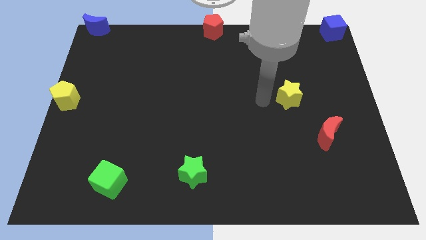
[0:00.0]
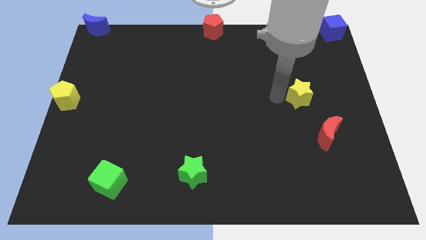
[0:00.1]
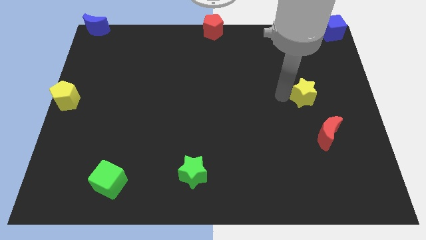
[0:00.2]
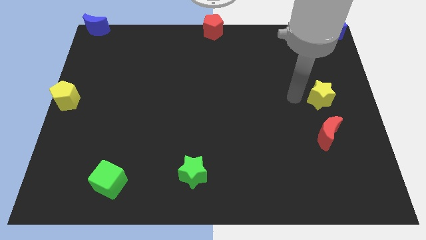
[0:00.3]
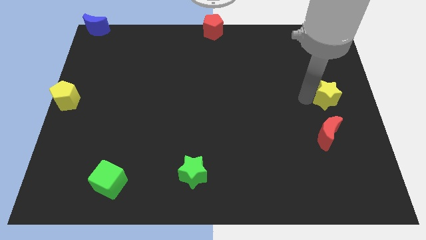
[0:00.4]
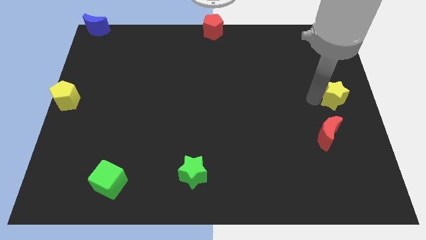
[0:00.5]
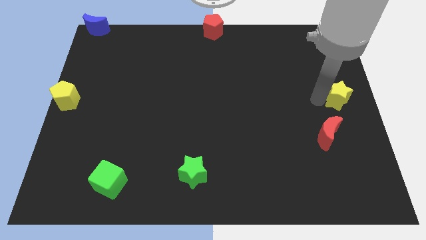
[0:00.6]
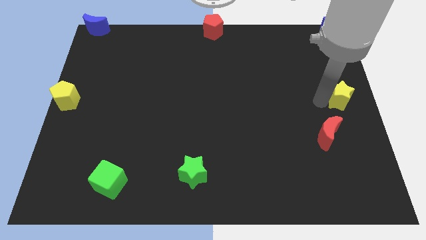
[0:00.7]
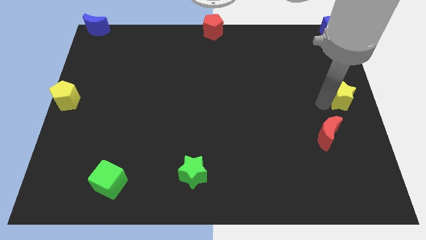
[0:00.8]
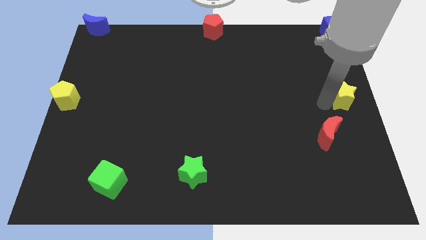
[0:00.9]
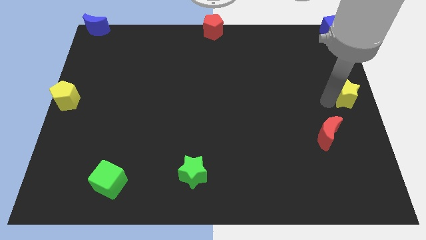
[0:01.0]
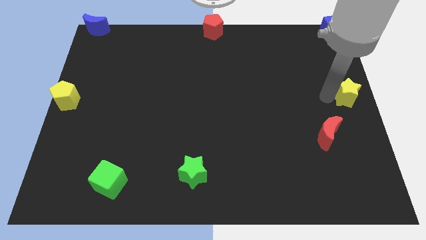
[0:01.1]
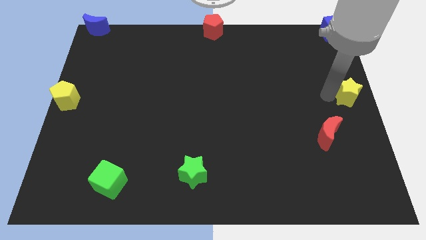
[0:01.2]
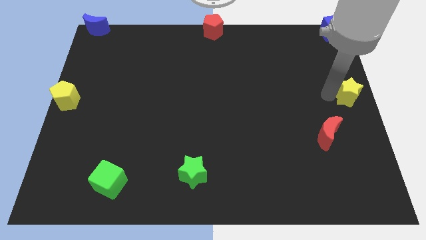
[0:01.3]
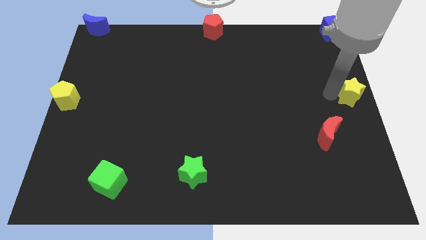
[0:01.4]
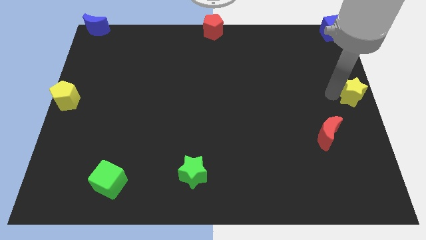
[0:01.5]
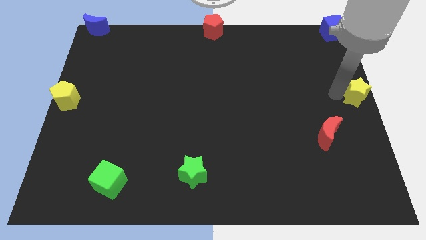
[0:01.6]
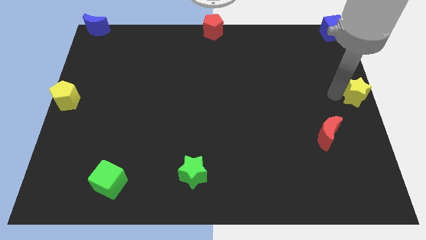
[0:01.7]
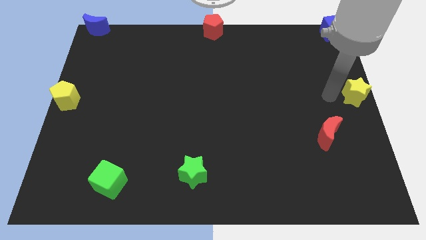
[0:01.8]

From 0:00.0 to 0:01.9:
slide the yellow star to the center right

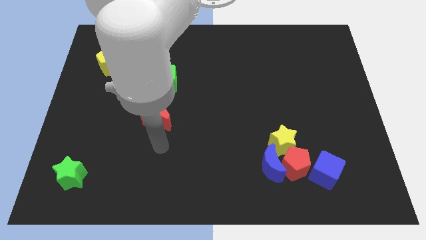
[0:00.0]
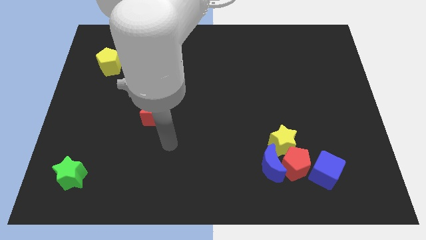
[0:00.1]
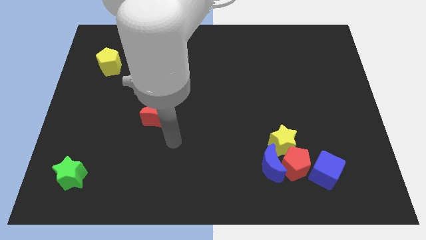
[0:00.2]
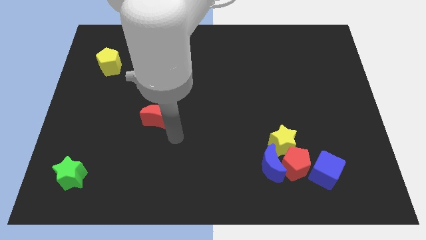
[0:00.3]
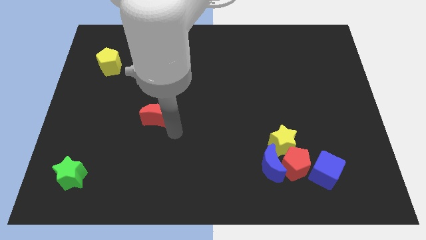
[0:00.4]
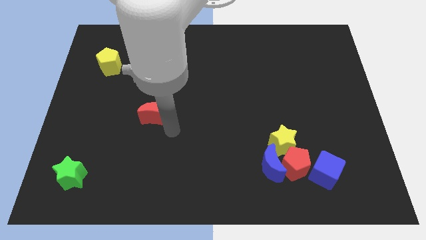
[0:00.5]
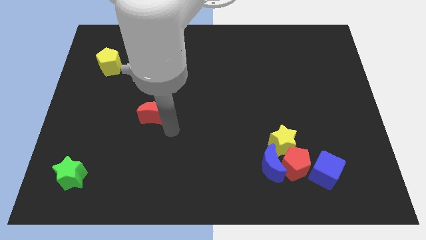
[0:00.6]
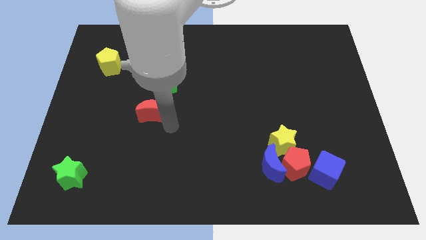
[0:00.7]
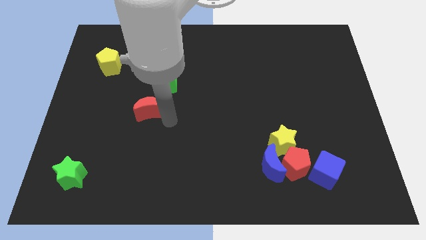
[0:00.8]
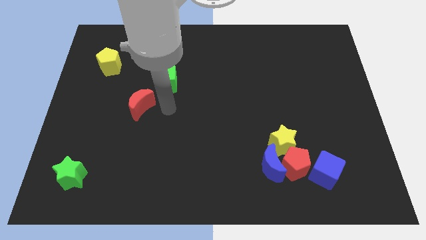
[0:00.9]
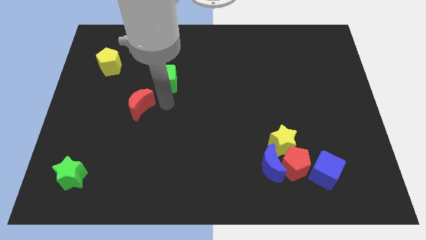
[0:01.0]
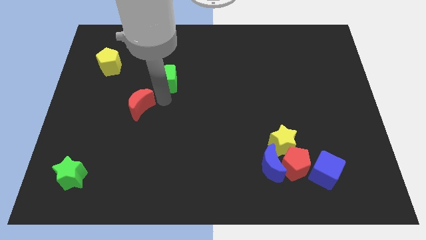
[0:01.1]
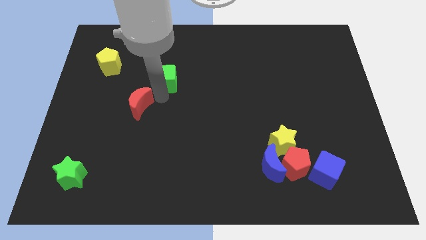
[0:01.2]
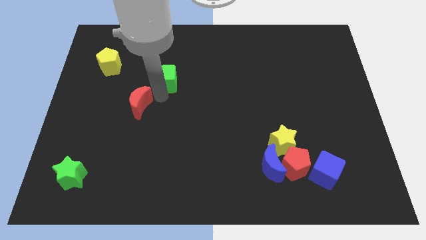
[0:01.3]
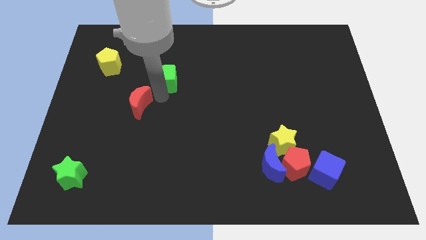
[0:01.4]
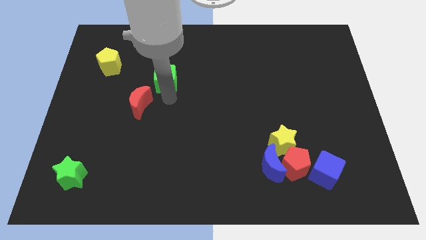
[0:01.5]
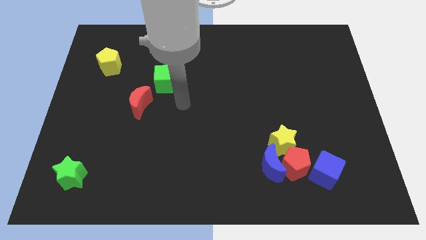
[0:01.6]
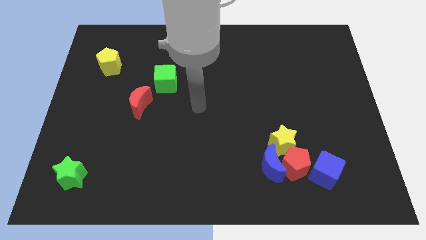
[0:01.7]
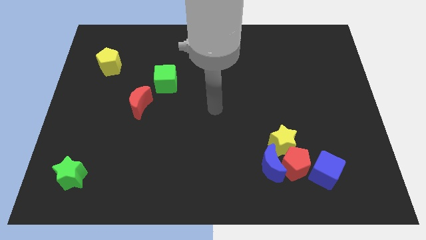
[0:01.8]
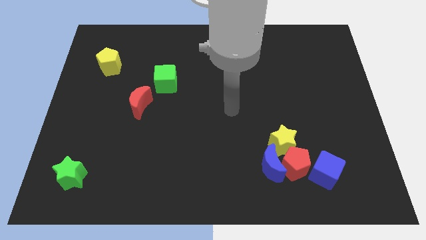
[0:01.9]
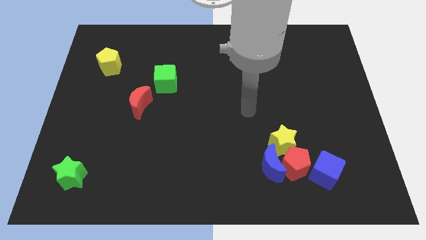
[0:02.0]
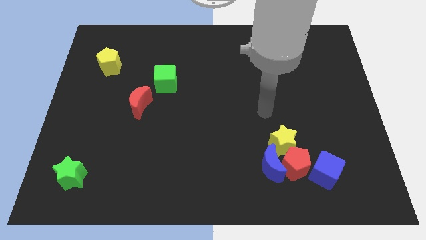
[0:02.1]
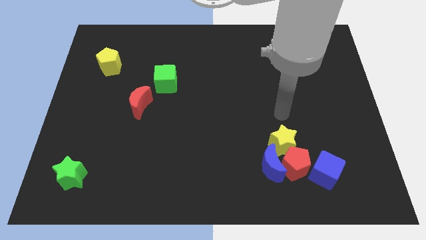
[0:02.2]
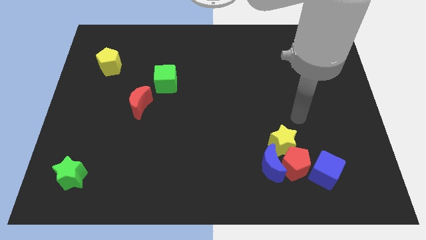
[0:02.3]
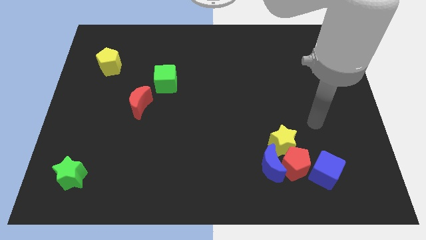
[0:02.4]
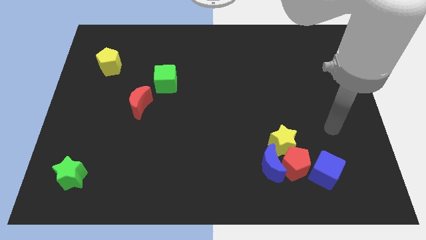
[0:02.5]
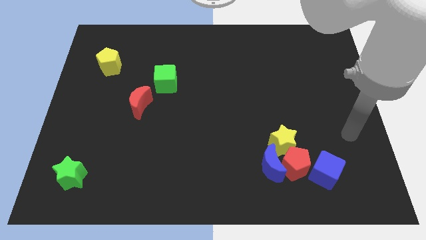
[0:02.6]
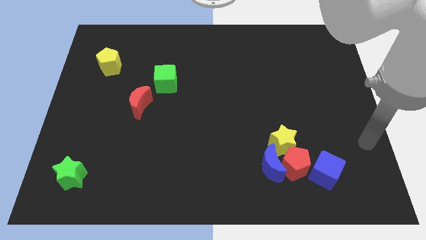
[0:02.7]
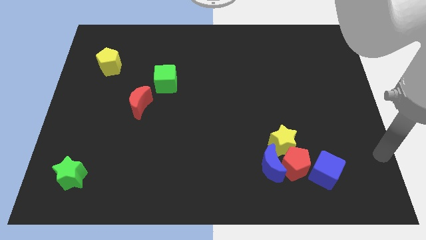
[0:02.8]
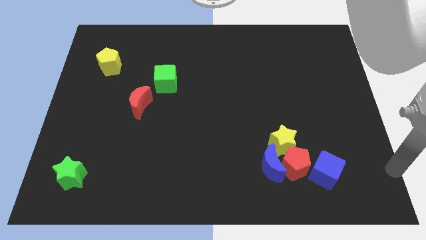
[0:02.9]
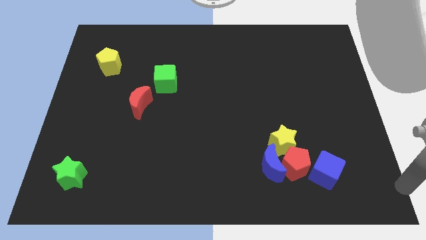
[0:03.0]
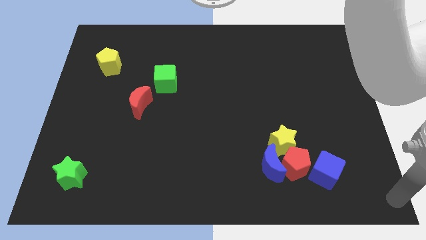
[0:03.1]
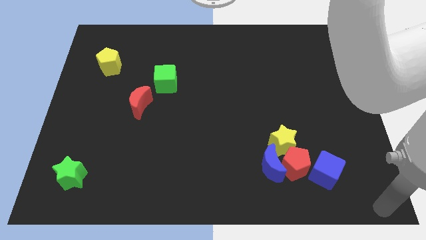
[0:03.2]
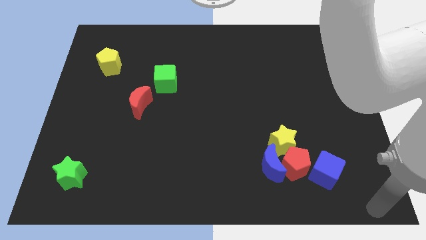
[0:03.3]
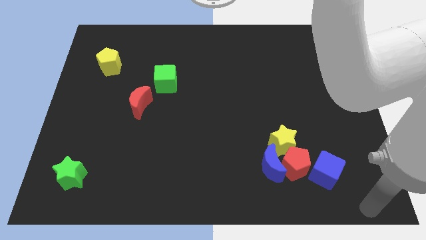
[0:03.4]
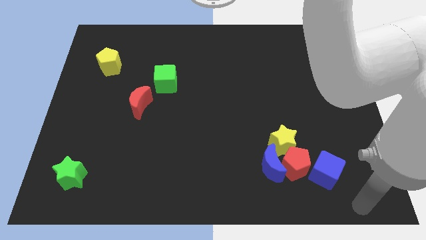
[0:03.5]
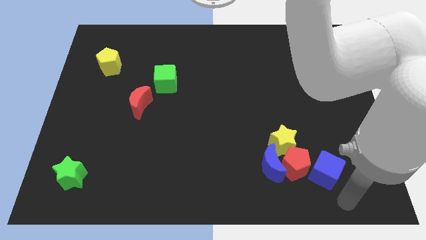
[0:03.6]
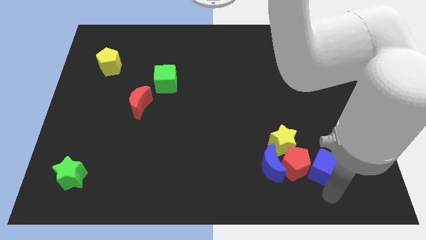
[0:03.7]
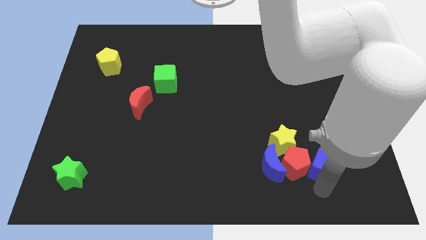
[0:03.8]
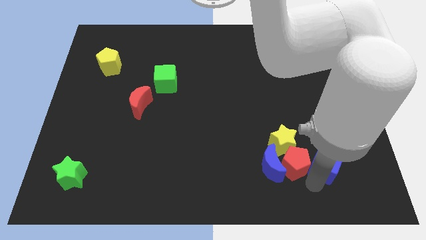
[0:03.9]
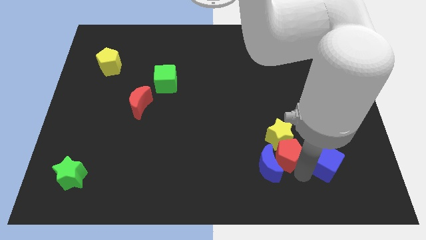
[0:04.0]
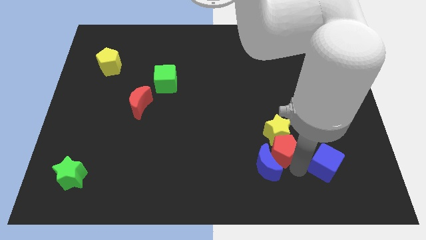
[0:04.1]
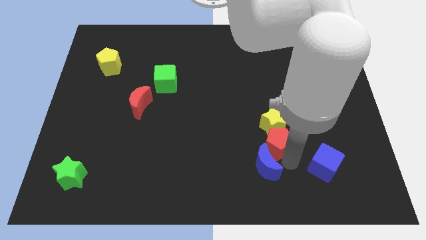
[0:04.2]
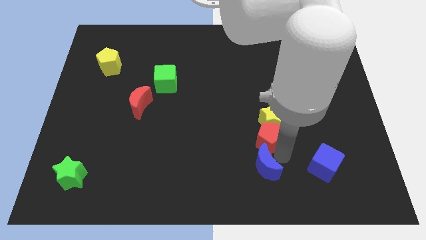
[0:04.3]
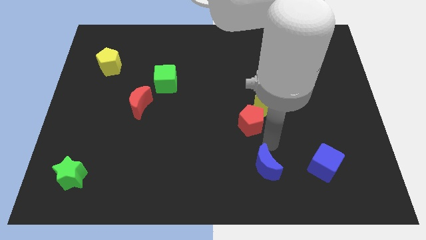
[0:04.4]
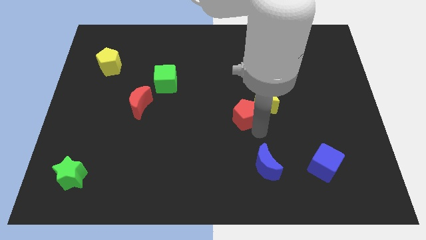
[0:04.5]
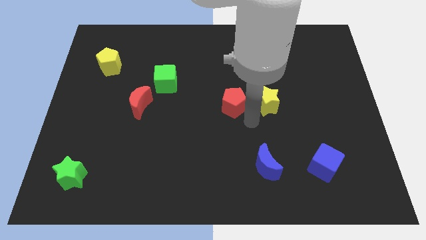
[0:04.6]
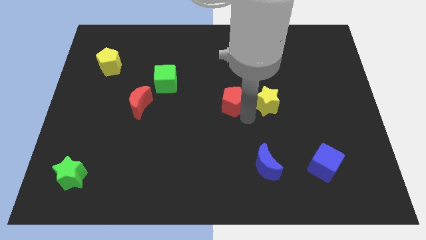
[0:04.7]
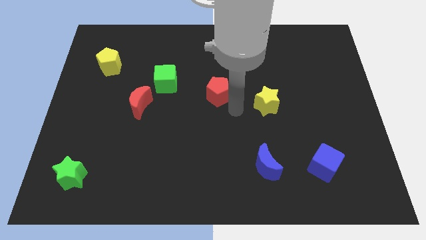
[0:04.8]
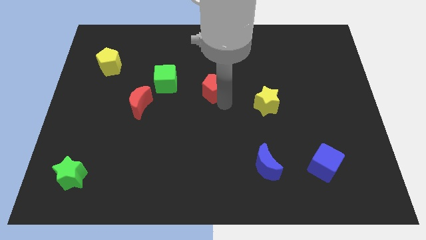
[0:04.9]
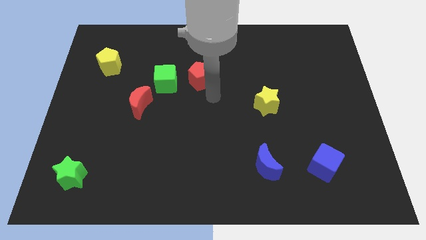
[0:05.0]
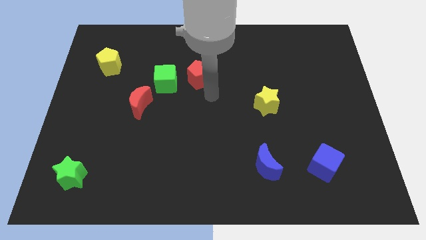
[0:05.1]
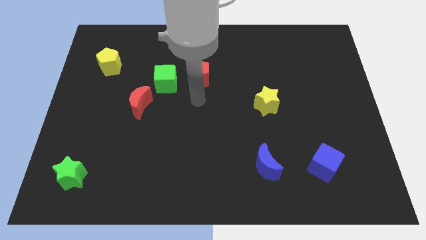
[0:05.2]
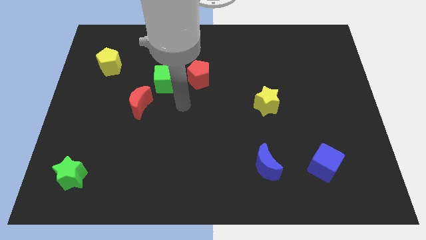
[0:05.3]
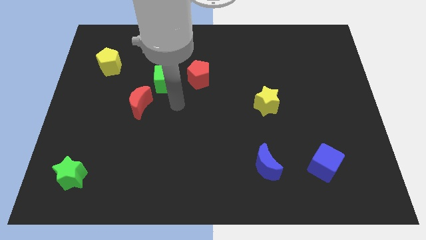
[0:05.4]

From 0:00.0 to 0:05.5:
move the red pentagon to right side of green cube

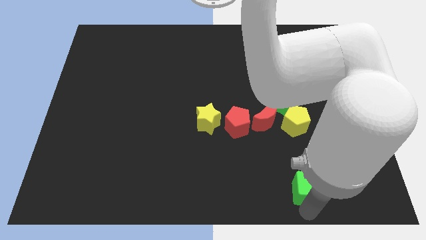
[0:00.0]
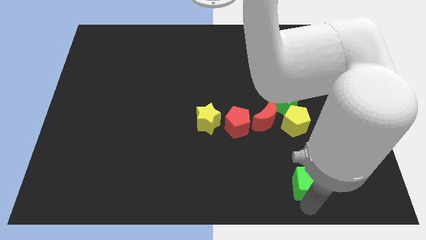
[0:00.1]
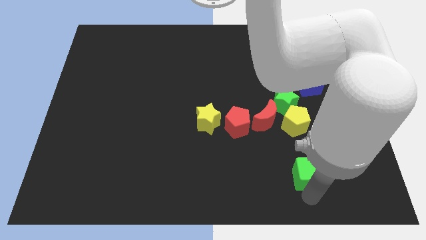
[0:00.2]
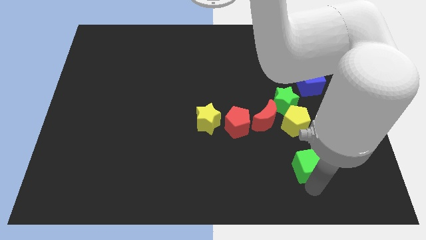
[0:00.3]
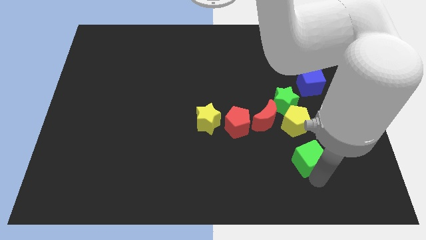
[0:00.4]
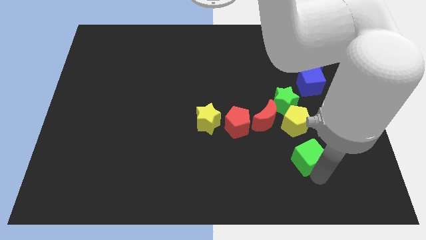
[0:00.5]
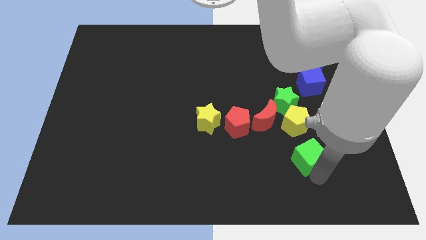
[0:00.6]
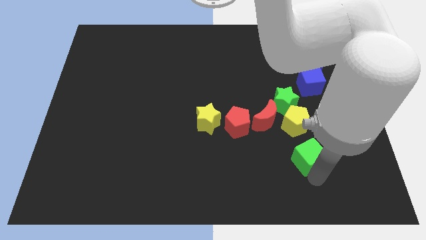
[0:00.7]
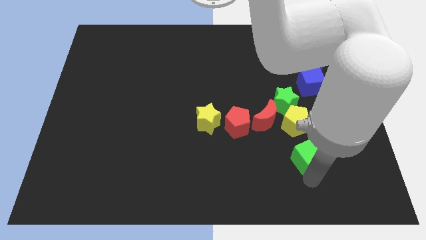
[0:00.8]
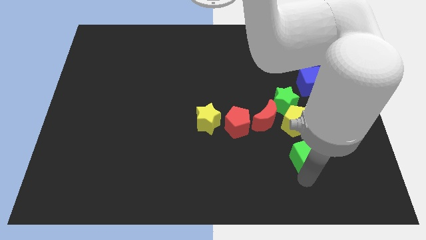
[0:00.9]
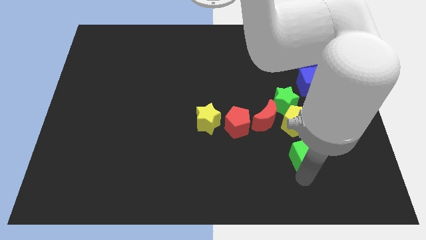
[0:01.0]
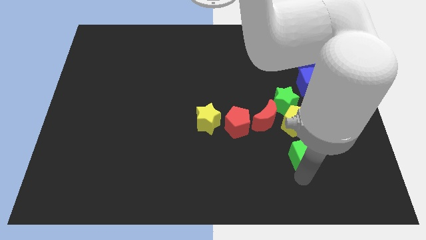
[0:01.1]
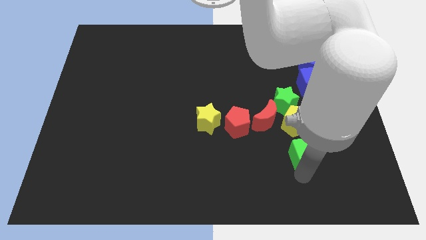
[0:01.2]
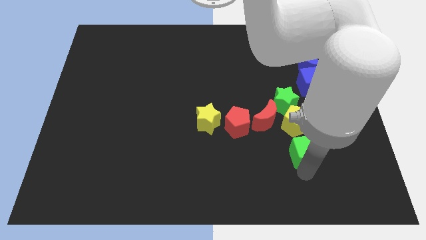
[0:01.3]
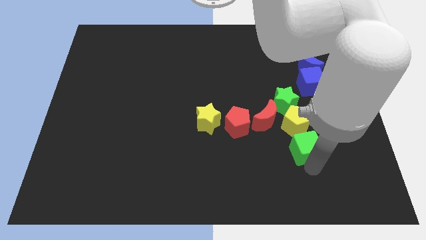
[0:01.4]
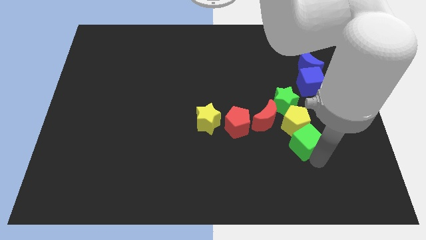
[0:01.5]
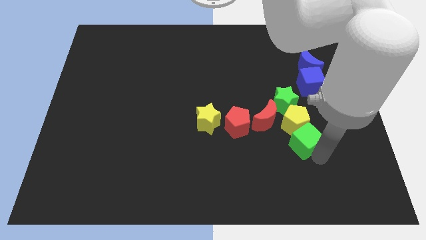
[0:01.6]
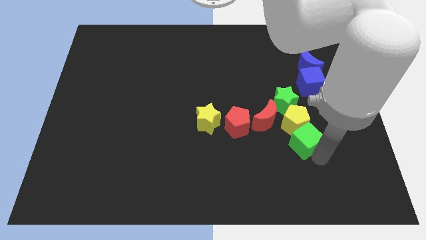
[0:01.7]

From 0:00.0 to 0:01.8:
move the green cube into the yellow pentagon
